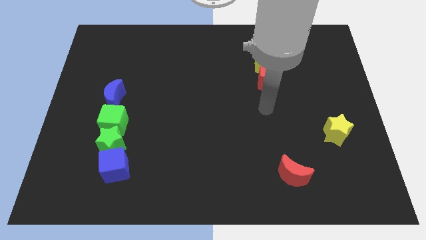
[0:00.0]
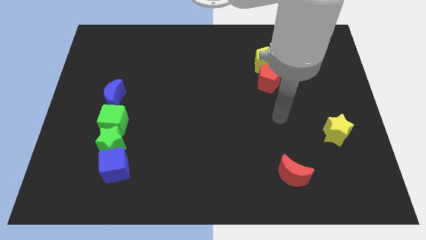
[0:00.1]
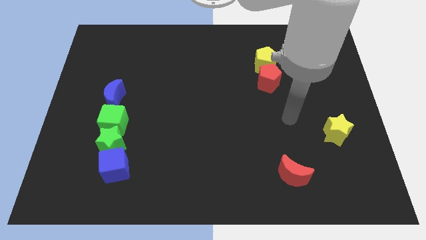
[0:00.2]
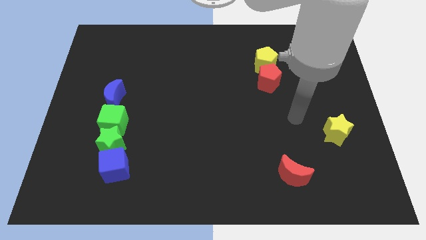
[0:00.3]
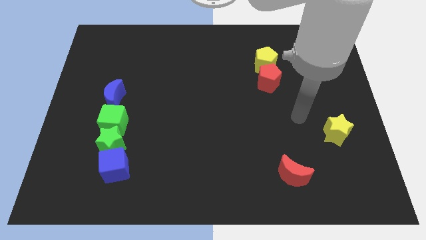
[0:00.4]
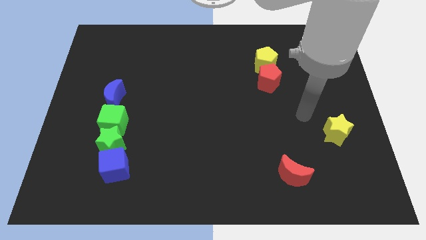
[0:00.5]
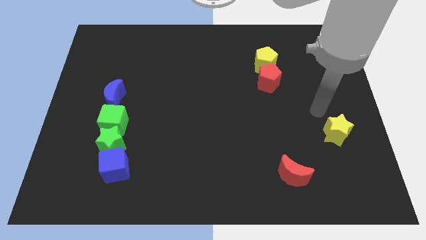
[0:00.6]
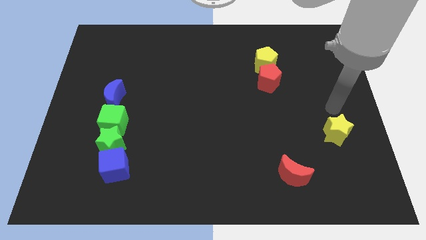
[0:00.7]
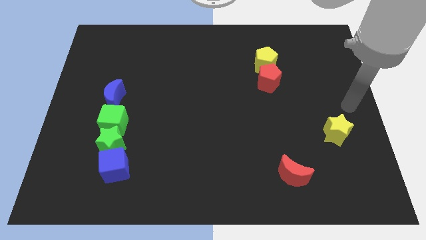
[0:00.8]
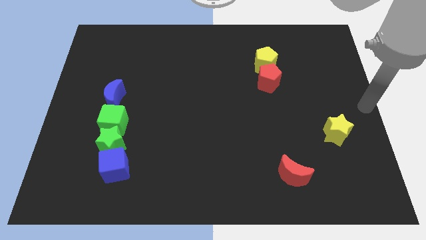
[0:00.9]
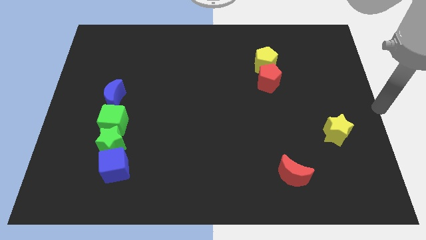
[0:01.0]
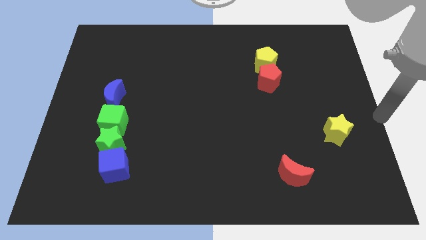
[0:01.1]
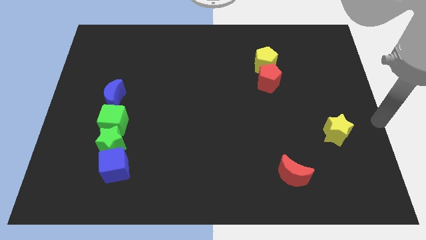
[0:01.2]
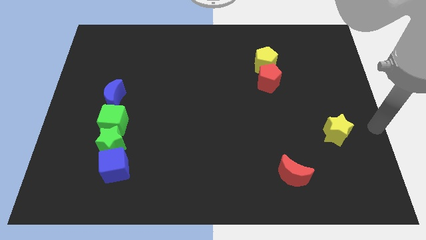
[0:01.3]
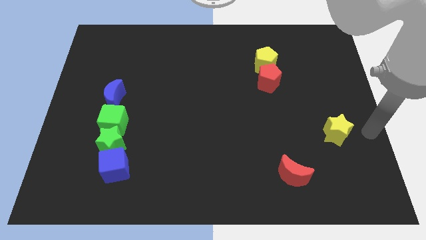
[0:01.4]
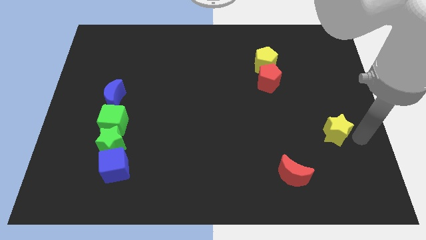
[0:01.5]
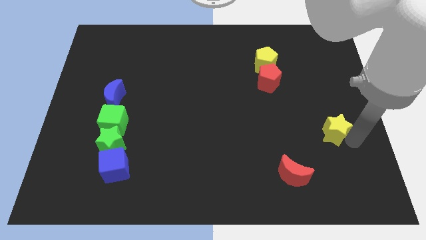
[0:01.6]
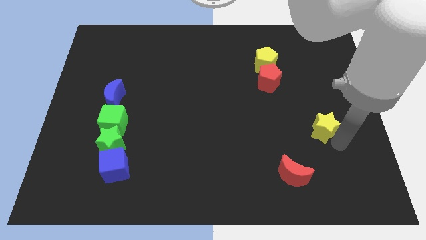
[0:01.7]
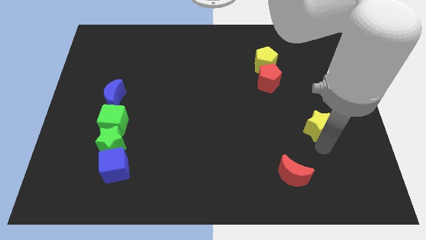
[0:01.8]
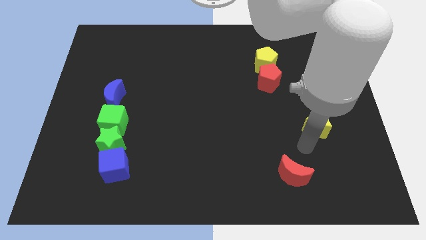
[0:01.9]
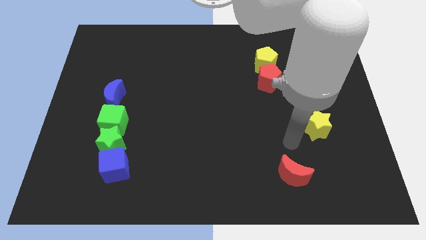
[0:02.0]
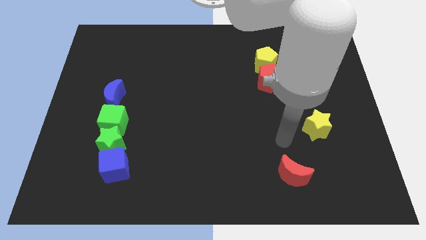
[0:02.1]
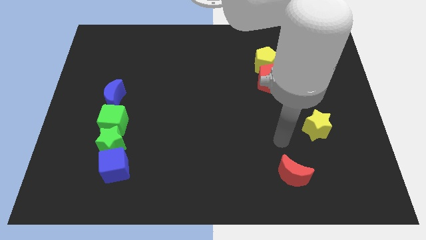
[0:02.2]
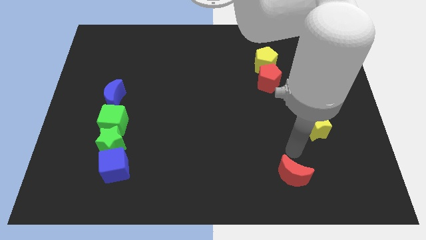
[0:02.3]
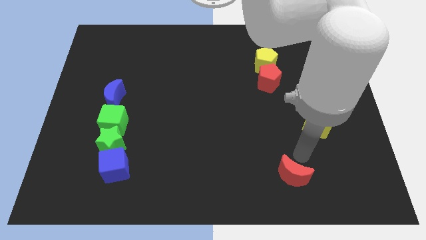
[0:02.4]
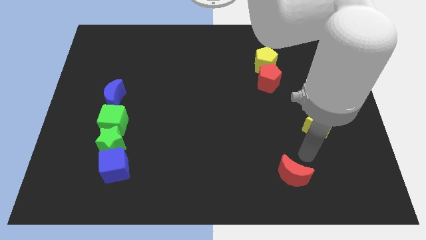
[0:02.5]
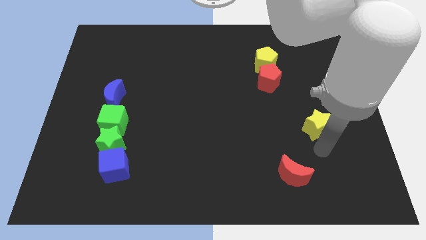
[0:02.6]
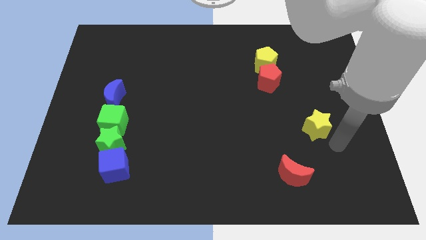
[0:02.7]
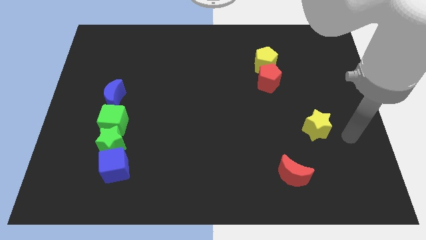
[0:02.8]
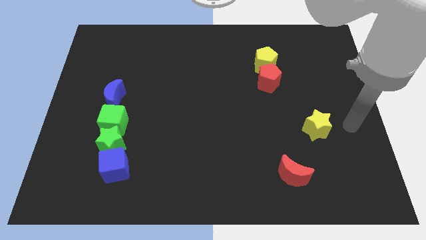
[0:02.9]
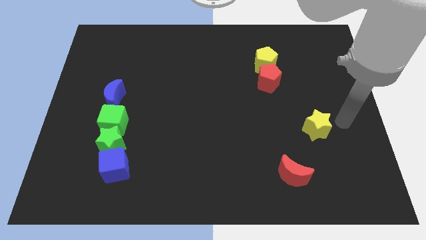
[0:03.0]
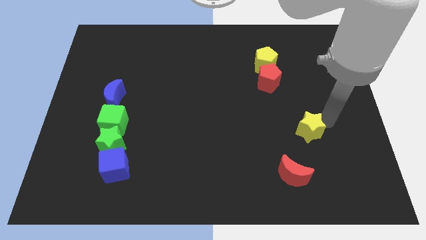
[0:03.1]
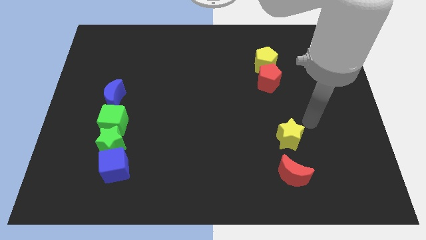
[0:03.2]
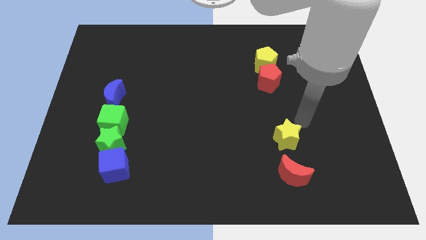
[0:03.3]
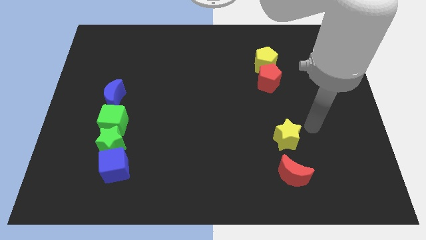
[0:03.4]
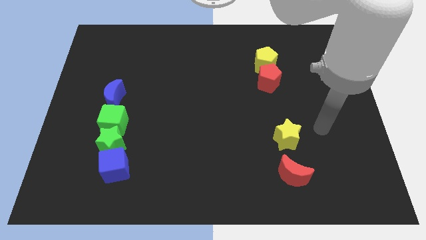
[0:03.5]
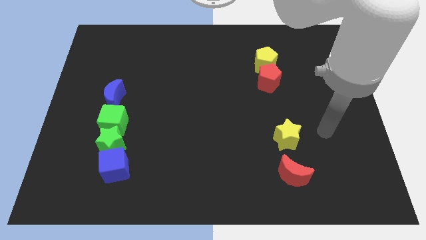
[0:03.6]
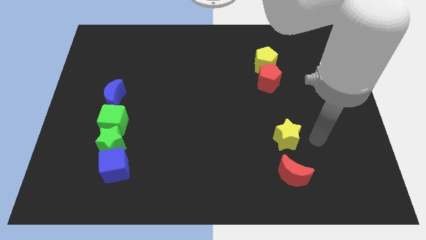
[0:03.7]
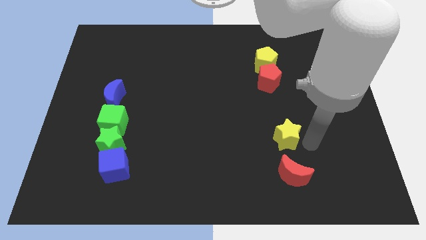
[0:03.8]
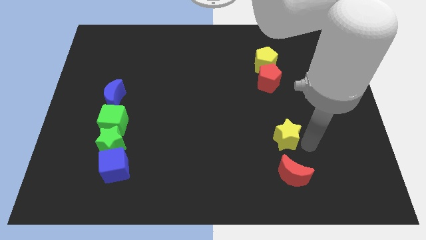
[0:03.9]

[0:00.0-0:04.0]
place the yellow star above the red crescent

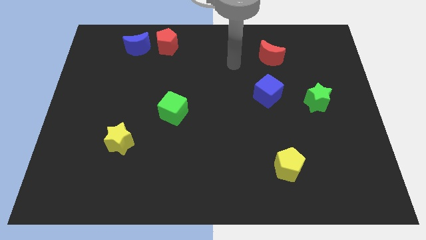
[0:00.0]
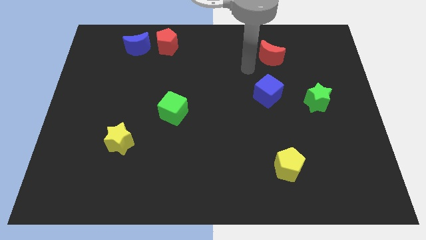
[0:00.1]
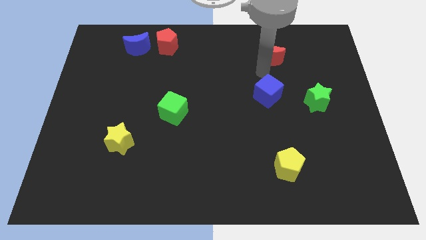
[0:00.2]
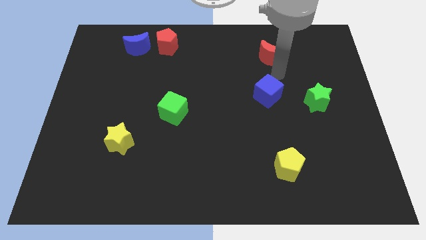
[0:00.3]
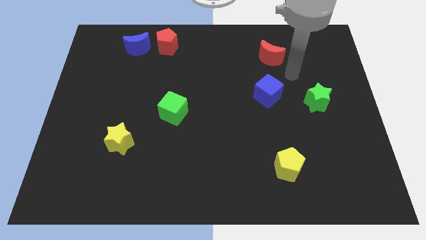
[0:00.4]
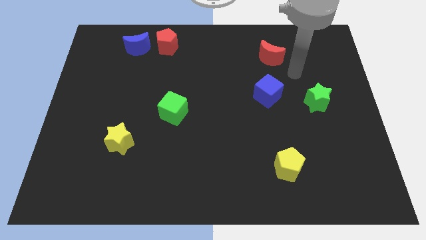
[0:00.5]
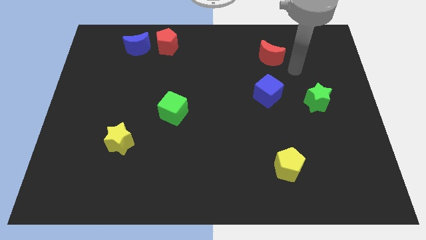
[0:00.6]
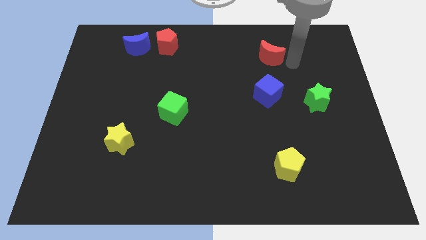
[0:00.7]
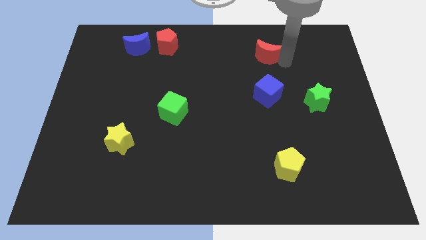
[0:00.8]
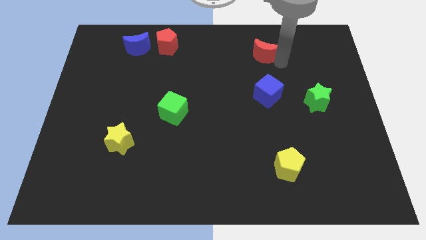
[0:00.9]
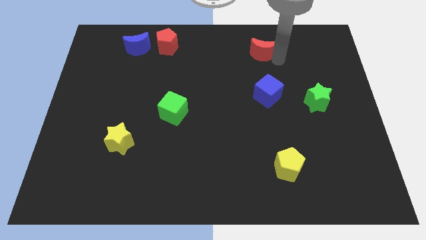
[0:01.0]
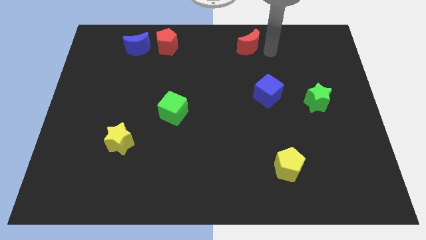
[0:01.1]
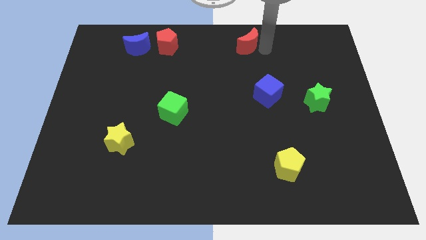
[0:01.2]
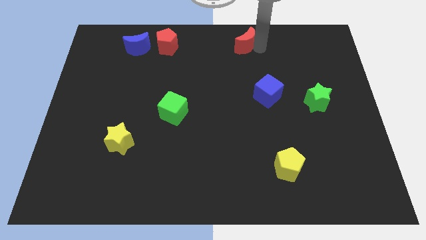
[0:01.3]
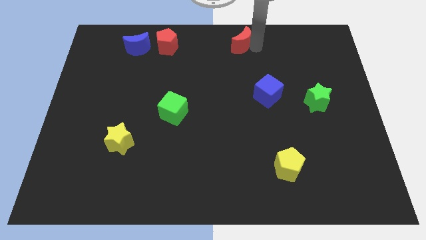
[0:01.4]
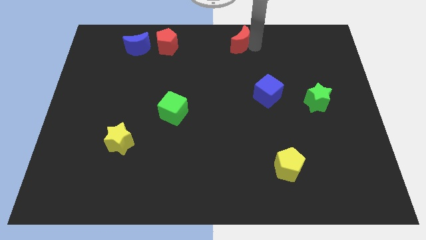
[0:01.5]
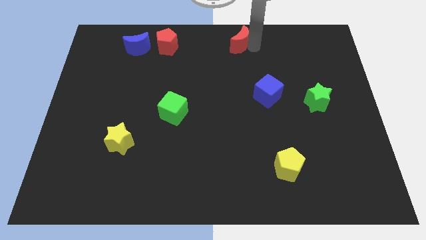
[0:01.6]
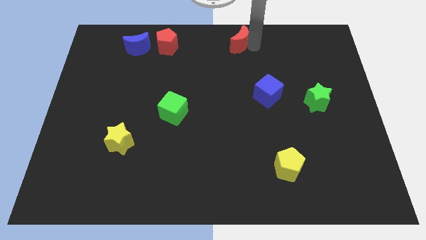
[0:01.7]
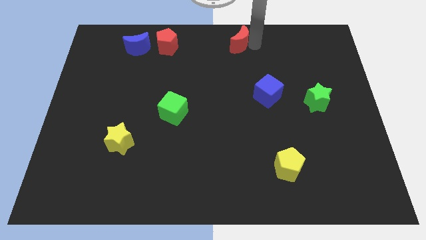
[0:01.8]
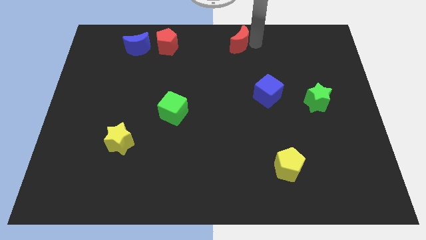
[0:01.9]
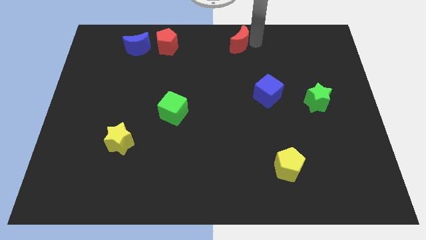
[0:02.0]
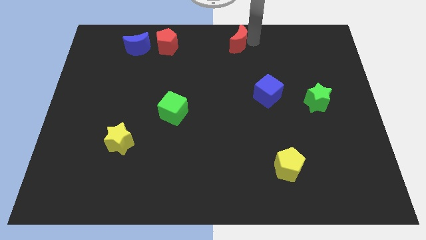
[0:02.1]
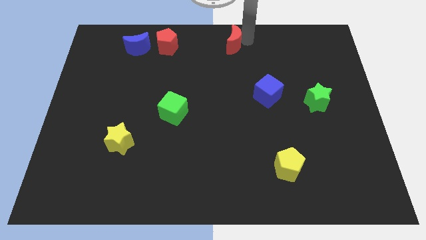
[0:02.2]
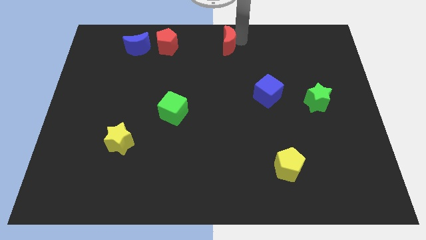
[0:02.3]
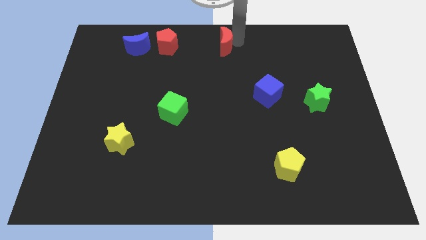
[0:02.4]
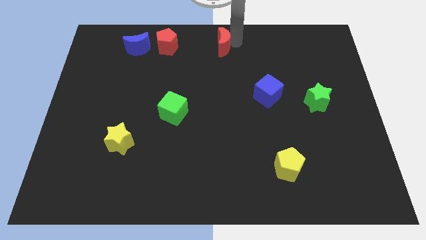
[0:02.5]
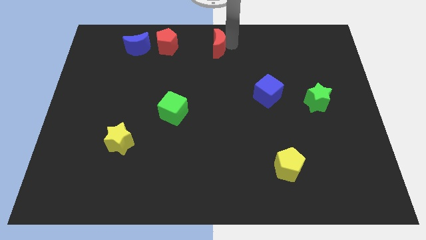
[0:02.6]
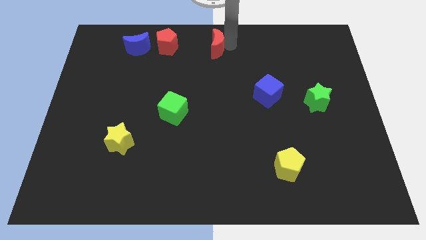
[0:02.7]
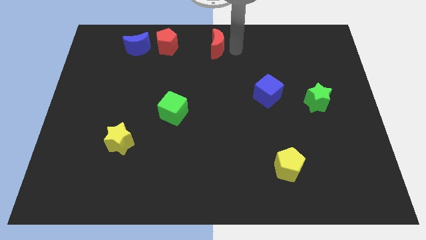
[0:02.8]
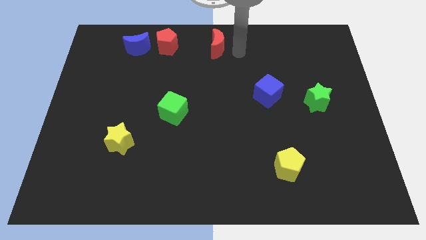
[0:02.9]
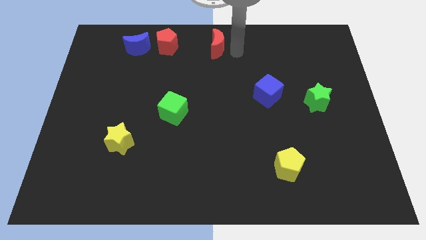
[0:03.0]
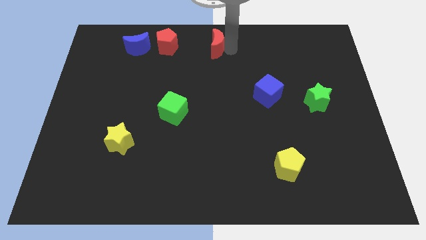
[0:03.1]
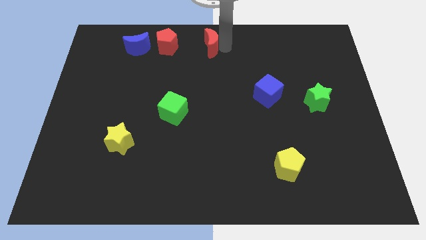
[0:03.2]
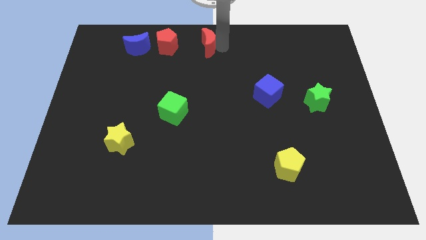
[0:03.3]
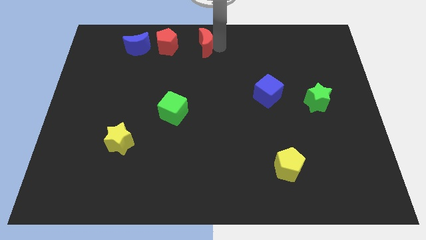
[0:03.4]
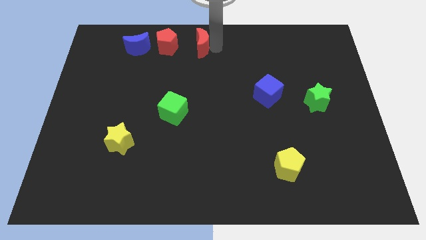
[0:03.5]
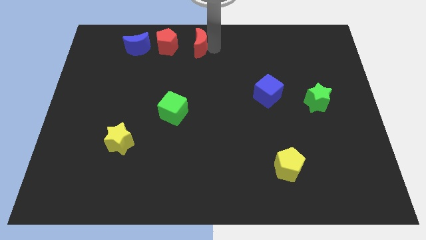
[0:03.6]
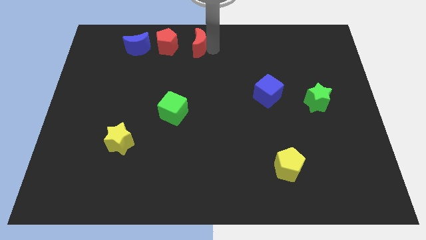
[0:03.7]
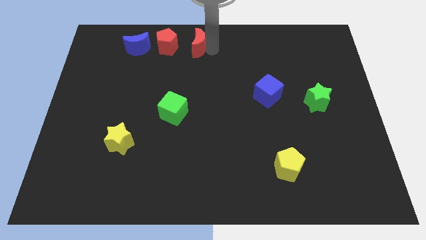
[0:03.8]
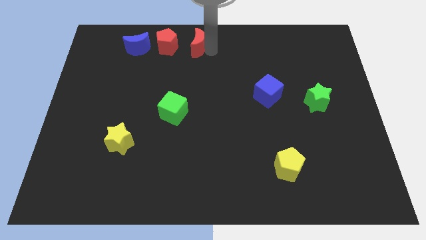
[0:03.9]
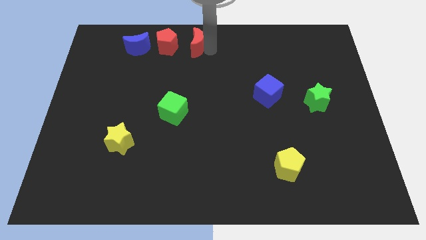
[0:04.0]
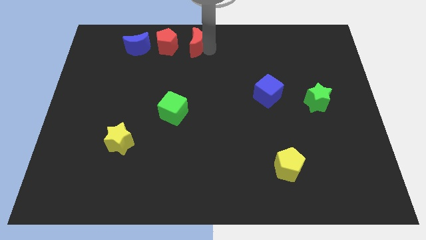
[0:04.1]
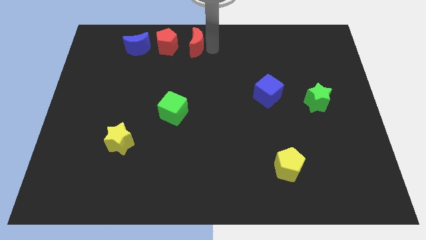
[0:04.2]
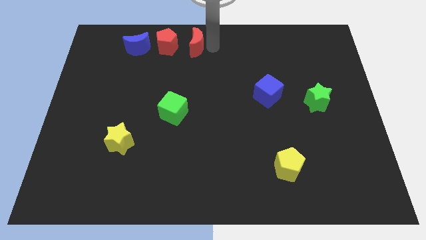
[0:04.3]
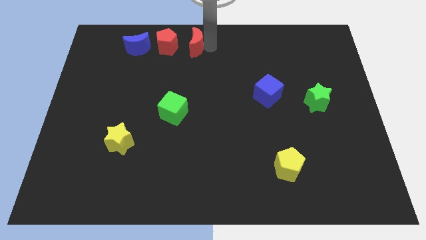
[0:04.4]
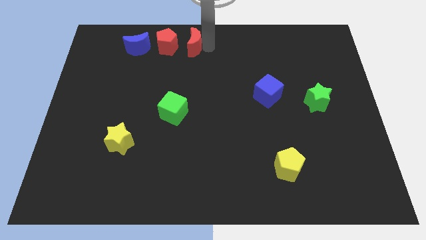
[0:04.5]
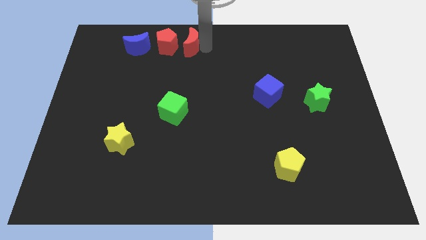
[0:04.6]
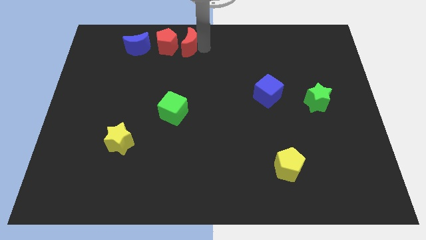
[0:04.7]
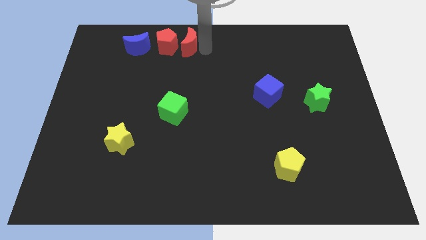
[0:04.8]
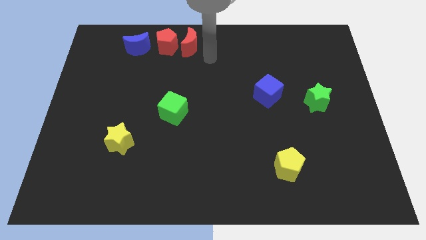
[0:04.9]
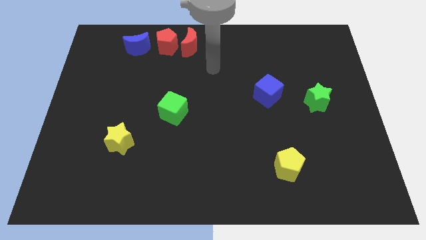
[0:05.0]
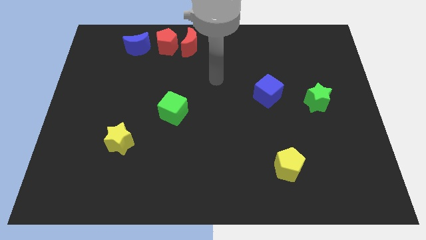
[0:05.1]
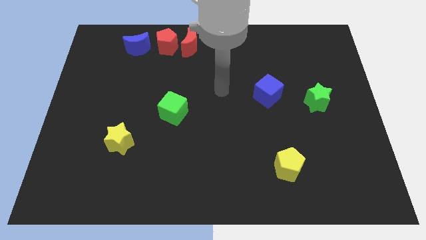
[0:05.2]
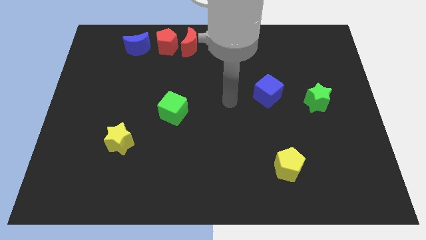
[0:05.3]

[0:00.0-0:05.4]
place red crescent to the right of red pentagon
